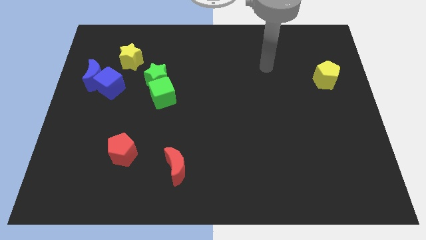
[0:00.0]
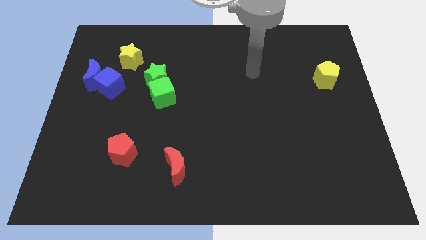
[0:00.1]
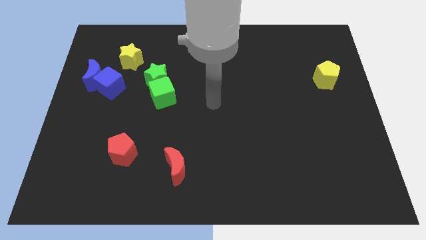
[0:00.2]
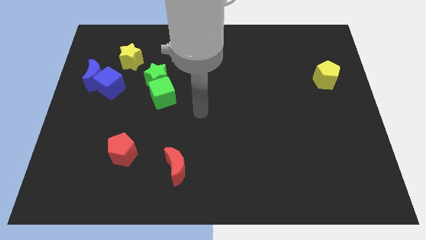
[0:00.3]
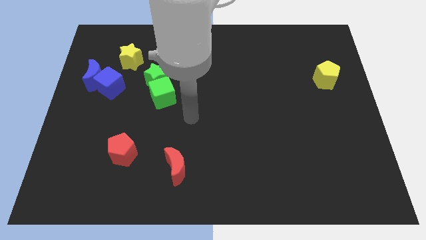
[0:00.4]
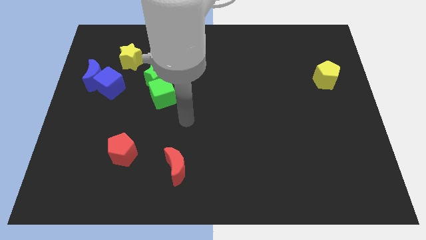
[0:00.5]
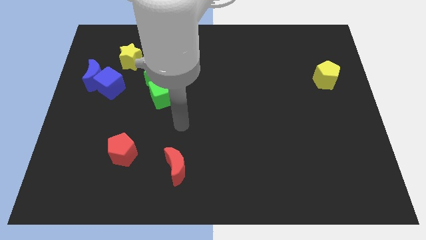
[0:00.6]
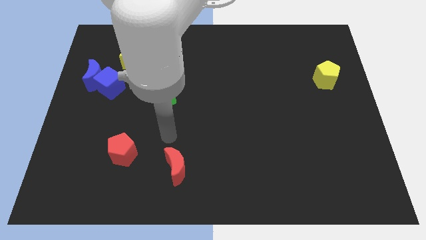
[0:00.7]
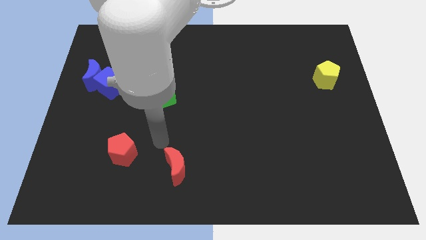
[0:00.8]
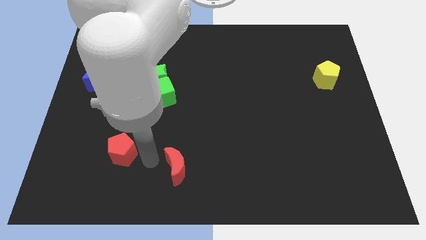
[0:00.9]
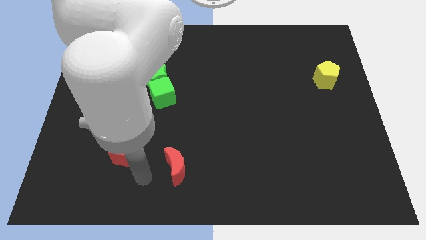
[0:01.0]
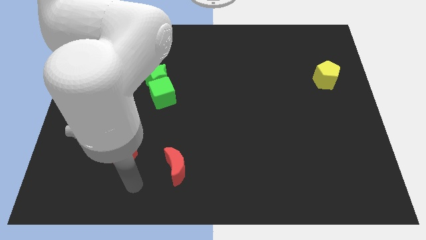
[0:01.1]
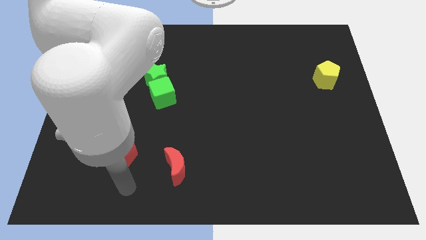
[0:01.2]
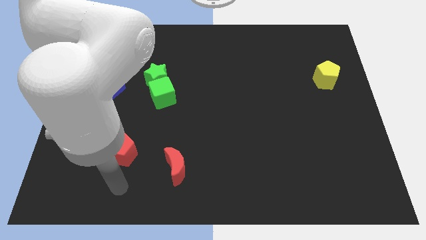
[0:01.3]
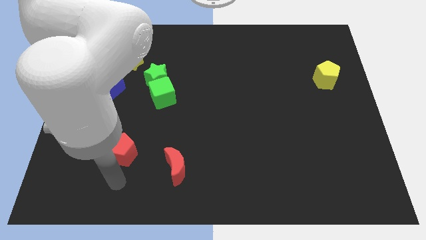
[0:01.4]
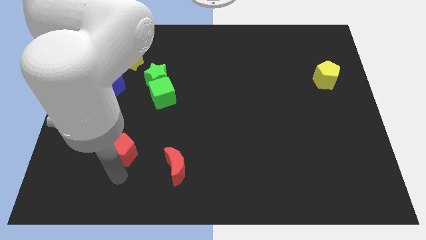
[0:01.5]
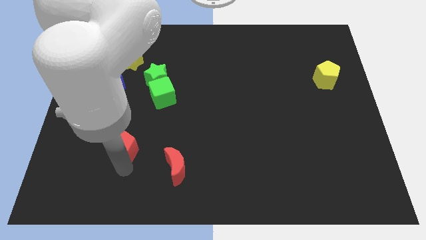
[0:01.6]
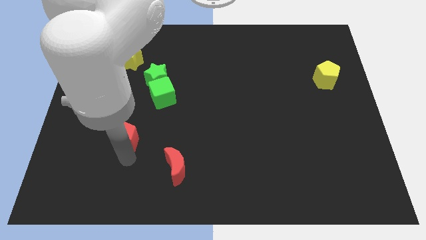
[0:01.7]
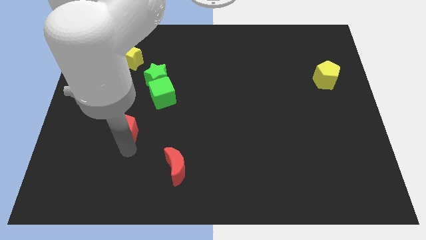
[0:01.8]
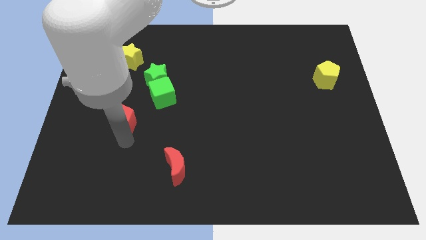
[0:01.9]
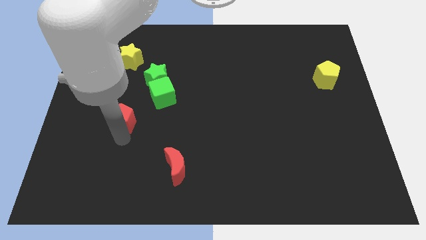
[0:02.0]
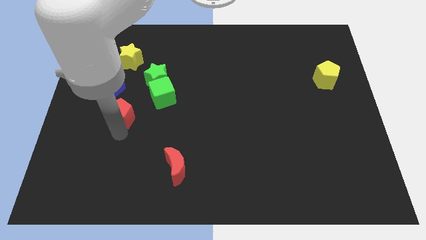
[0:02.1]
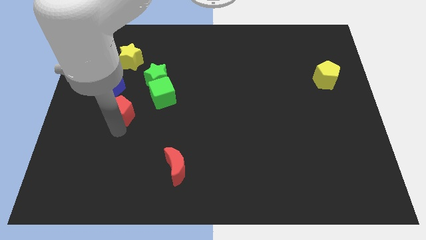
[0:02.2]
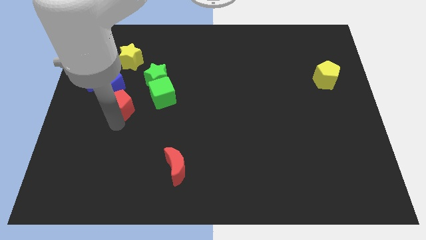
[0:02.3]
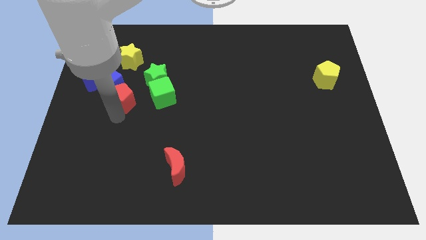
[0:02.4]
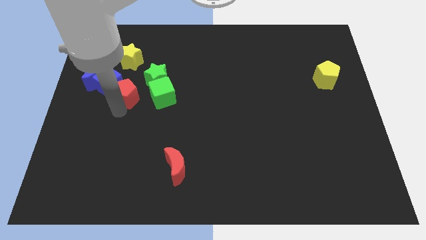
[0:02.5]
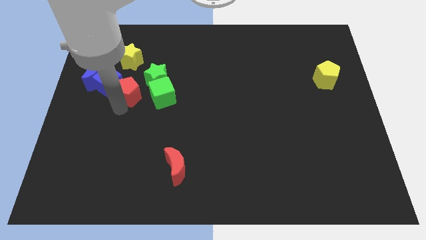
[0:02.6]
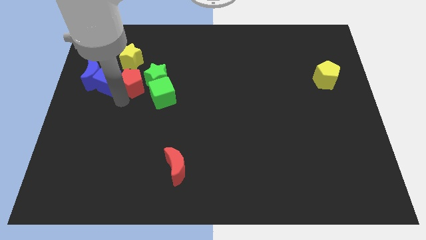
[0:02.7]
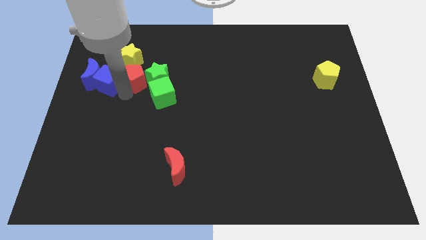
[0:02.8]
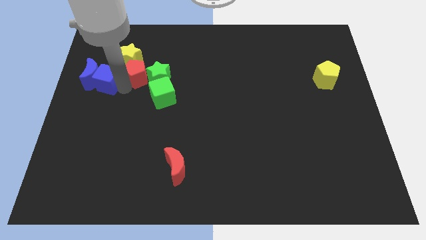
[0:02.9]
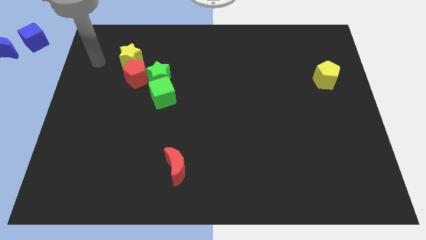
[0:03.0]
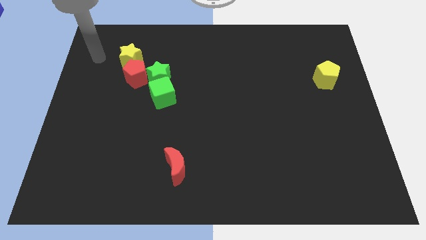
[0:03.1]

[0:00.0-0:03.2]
put the red pentagon towards the yellow star

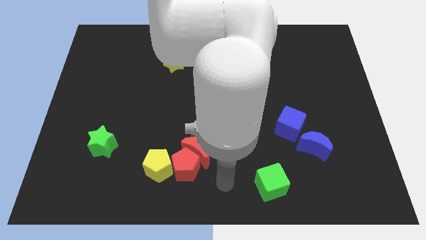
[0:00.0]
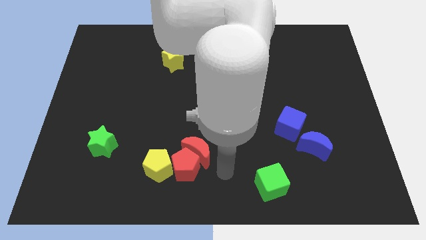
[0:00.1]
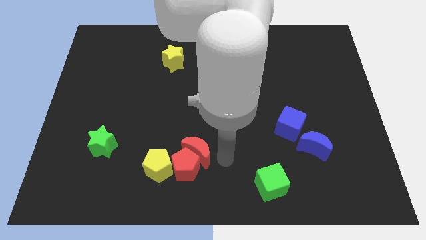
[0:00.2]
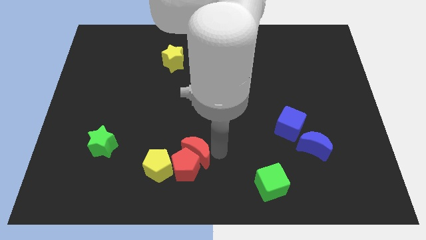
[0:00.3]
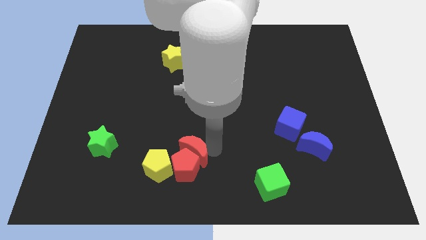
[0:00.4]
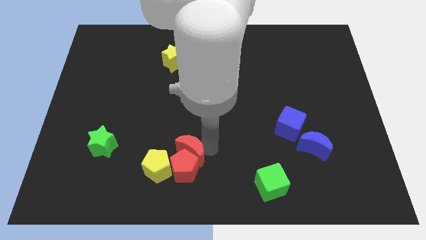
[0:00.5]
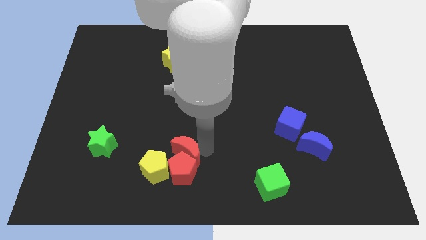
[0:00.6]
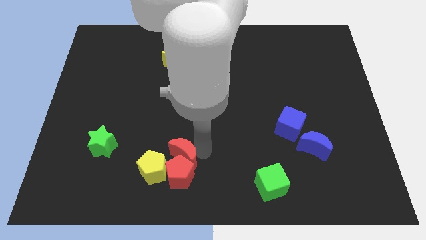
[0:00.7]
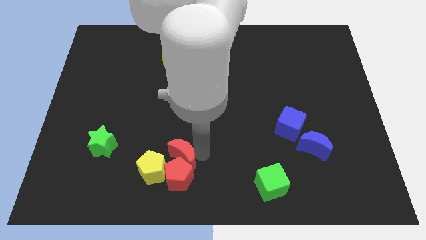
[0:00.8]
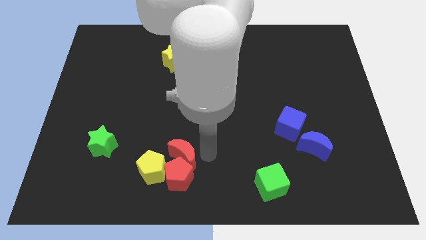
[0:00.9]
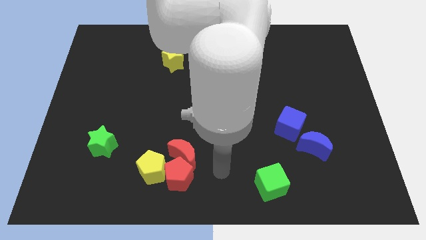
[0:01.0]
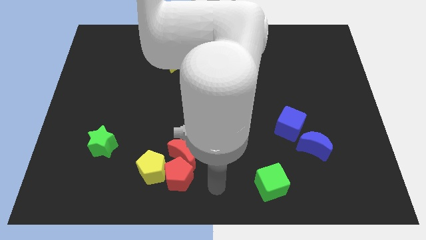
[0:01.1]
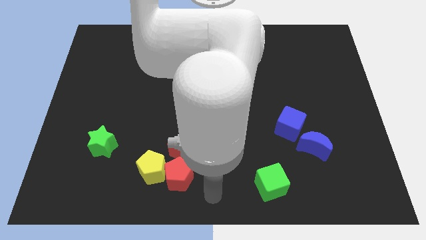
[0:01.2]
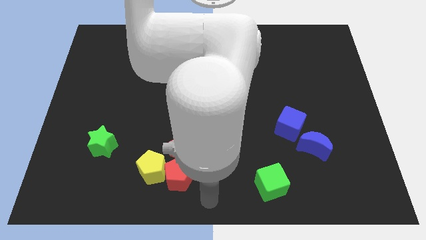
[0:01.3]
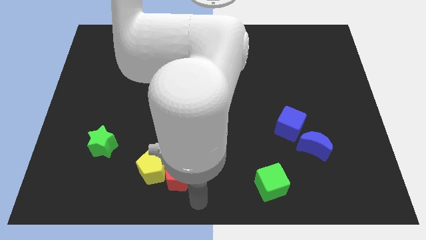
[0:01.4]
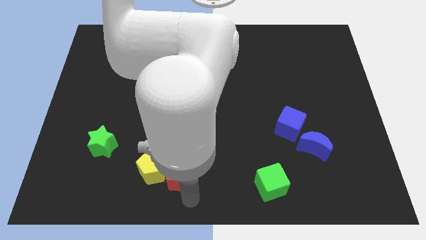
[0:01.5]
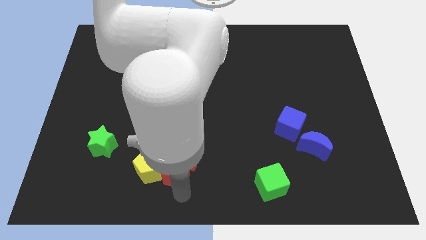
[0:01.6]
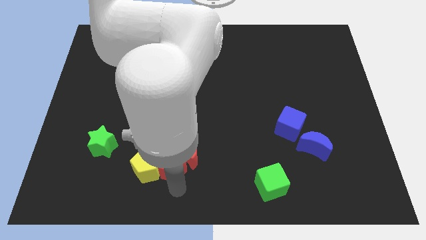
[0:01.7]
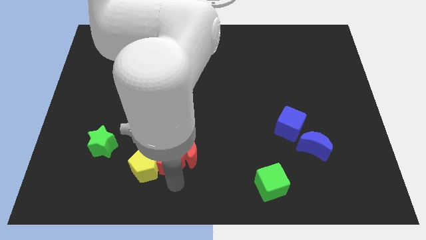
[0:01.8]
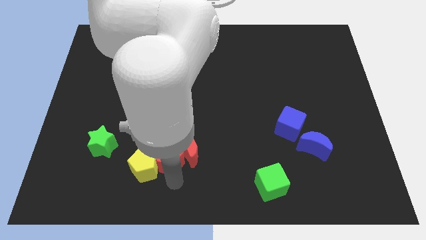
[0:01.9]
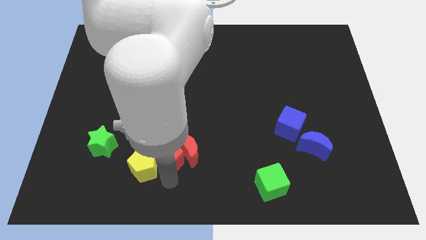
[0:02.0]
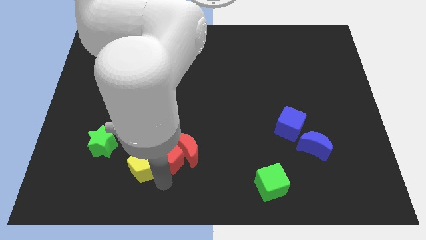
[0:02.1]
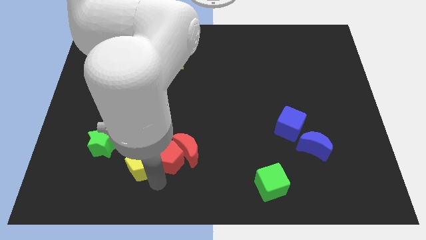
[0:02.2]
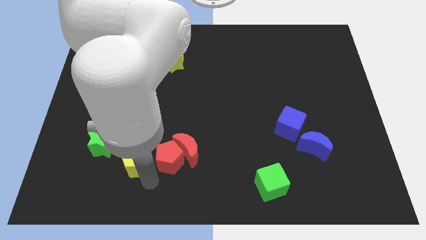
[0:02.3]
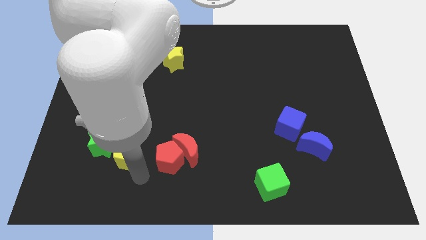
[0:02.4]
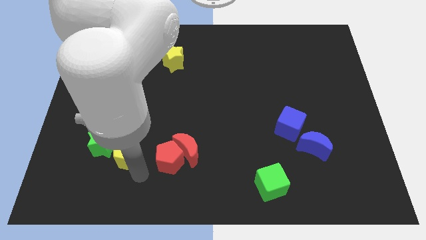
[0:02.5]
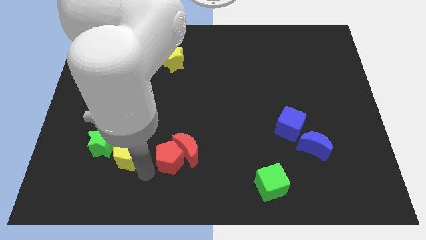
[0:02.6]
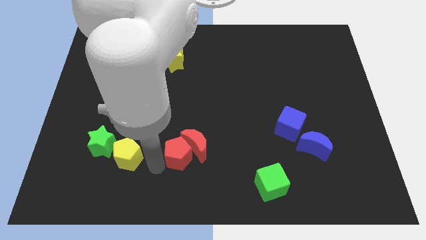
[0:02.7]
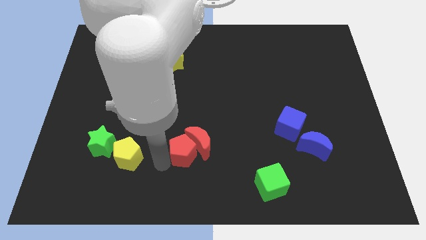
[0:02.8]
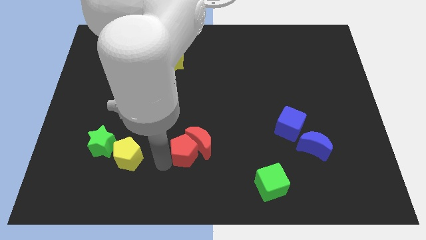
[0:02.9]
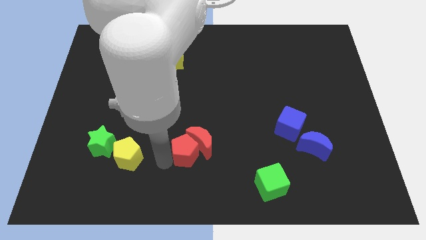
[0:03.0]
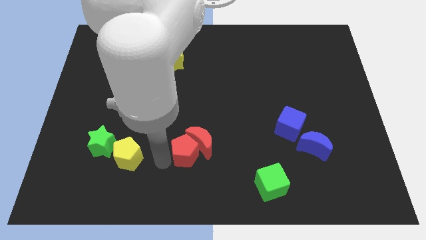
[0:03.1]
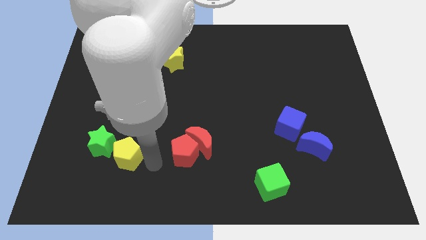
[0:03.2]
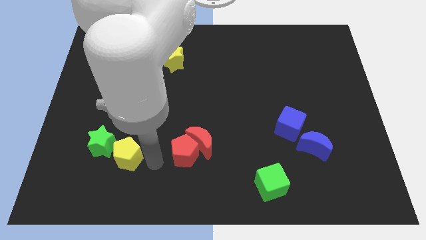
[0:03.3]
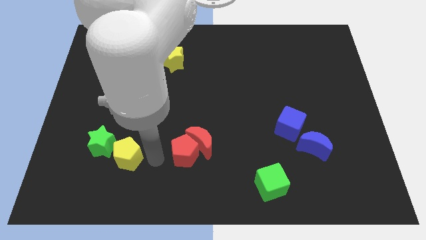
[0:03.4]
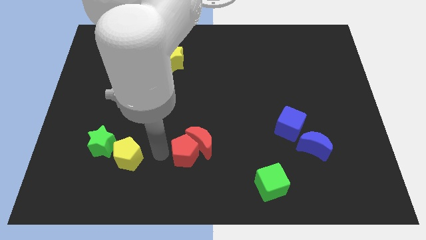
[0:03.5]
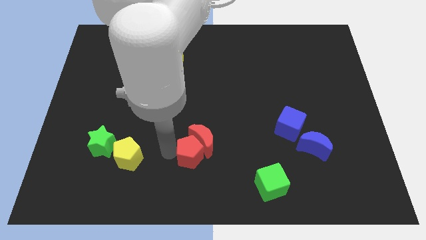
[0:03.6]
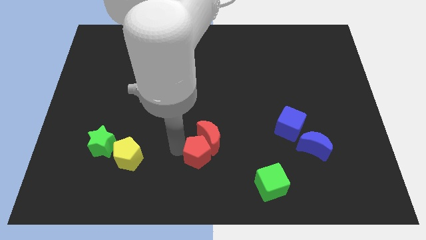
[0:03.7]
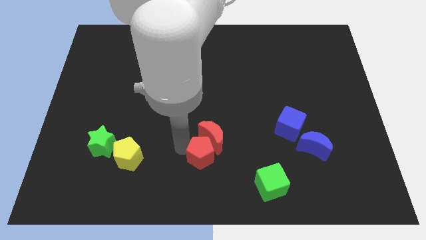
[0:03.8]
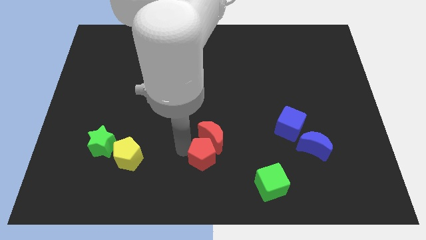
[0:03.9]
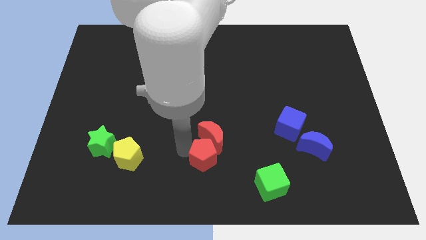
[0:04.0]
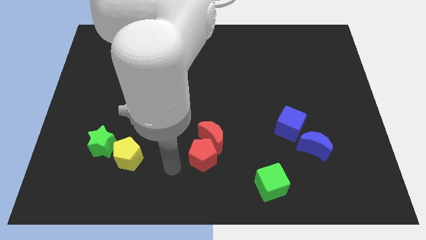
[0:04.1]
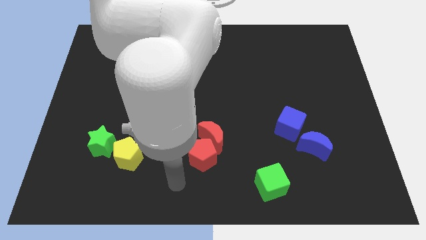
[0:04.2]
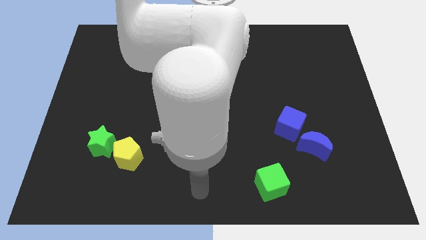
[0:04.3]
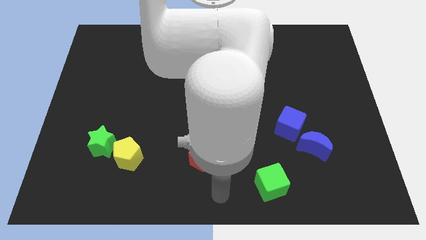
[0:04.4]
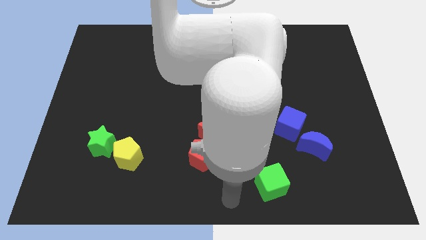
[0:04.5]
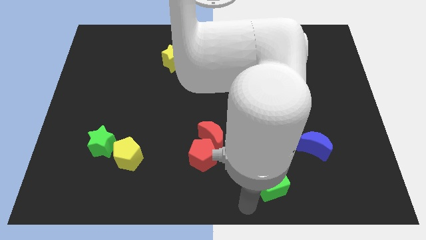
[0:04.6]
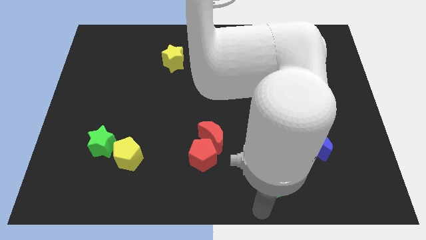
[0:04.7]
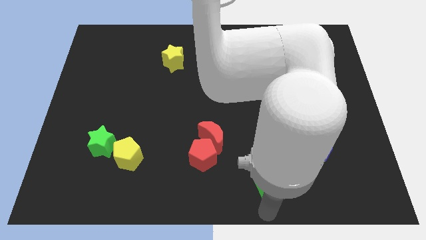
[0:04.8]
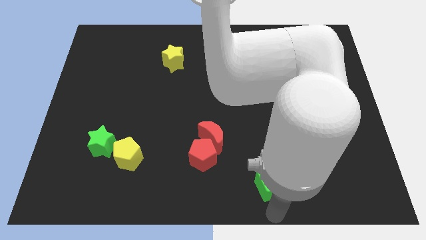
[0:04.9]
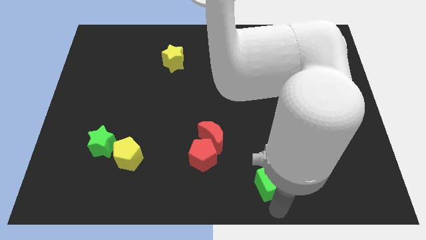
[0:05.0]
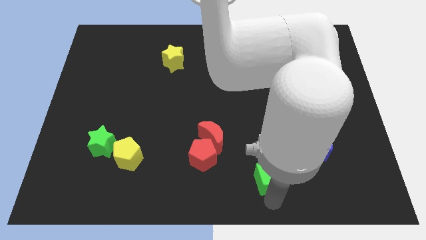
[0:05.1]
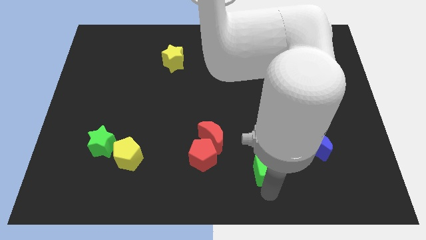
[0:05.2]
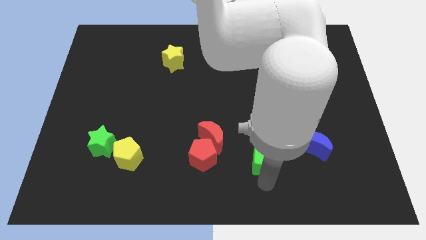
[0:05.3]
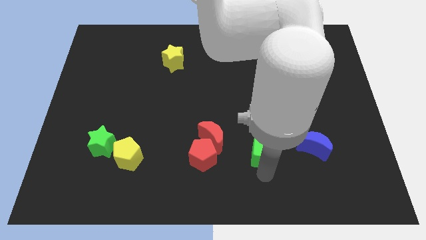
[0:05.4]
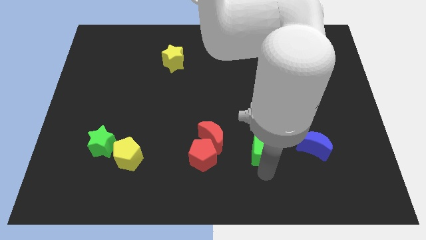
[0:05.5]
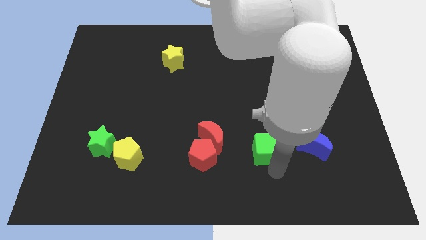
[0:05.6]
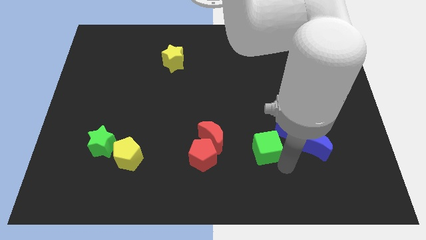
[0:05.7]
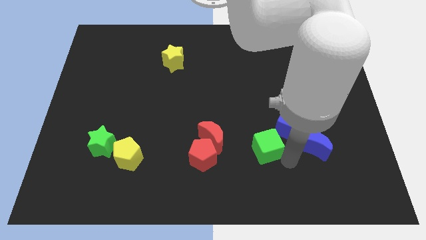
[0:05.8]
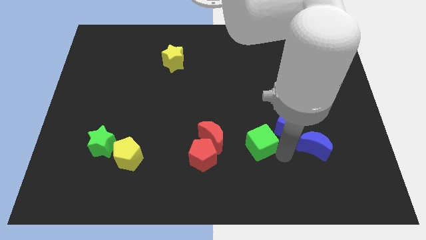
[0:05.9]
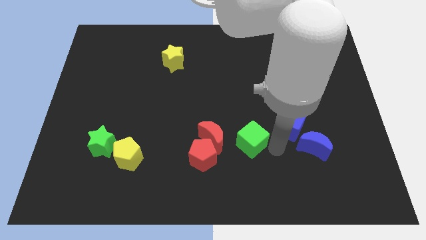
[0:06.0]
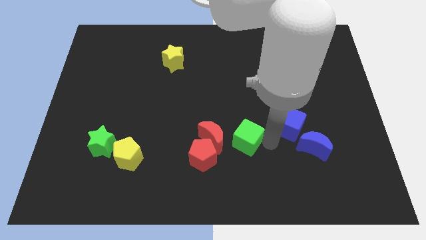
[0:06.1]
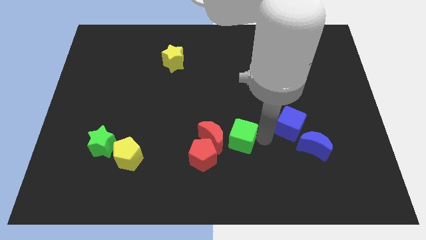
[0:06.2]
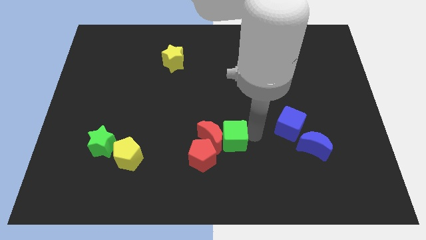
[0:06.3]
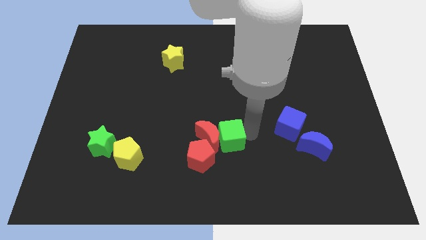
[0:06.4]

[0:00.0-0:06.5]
slide the green cube next to the red moon
